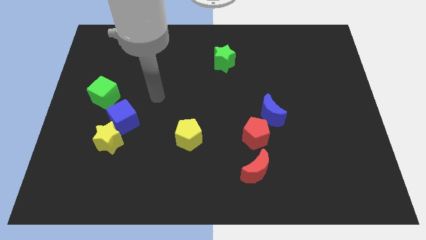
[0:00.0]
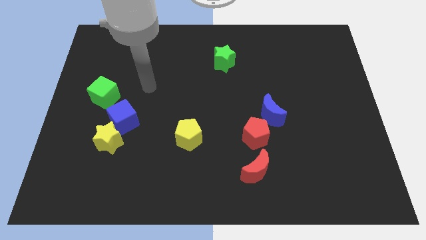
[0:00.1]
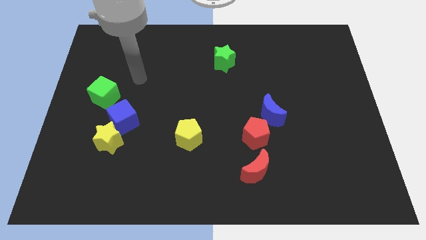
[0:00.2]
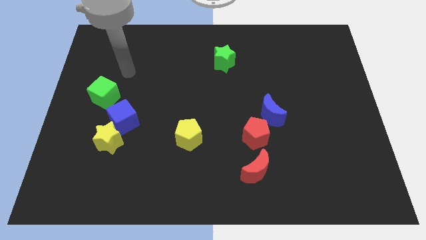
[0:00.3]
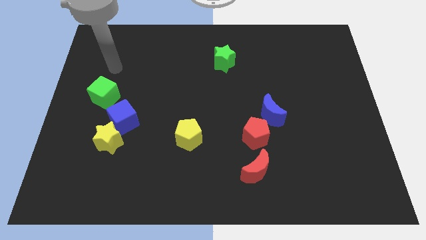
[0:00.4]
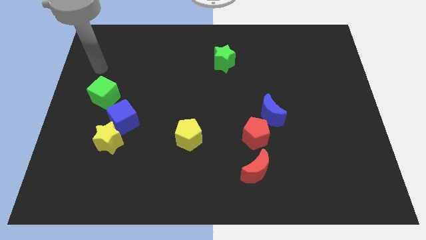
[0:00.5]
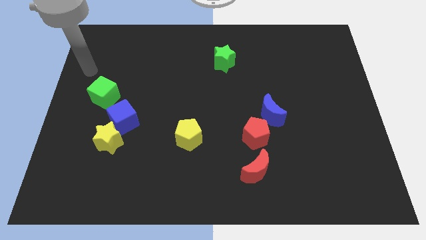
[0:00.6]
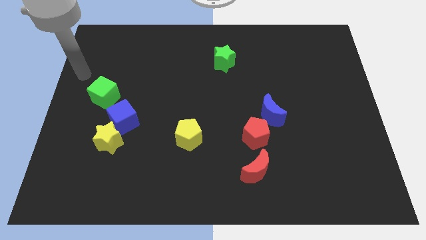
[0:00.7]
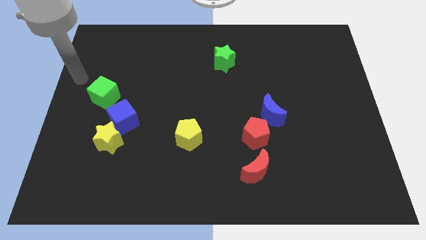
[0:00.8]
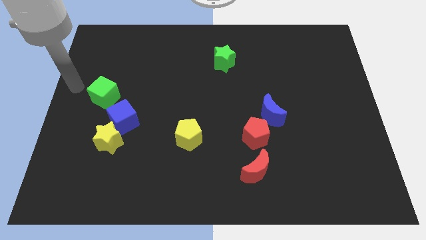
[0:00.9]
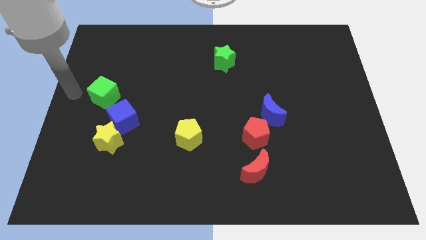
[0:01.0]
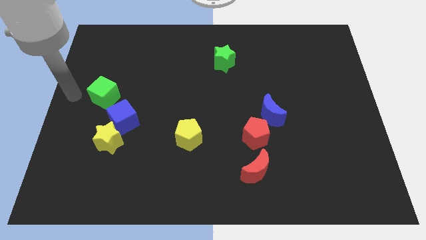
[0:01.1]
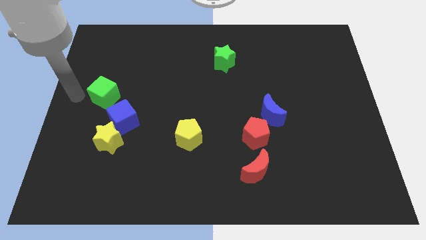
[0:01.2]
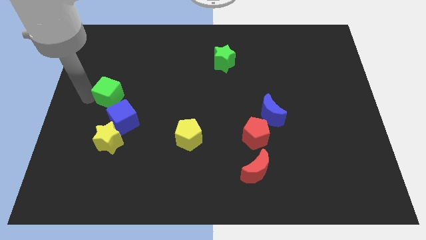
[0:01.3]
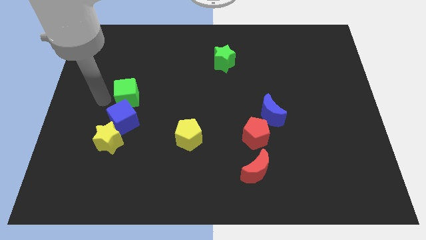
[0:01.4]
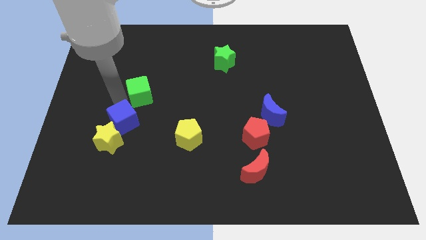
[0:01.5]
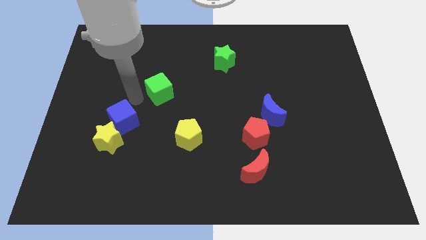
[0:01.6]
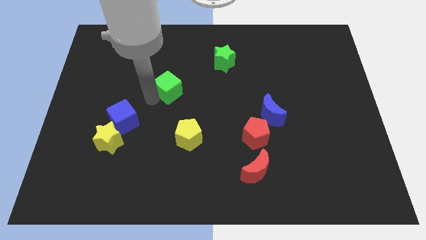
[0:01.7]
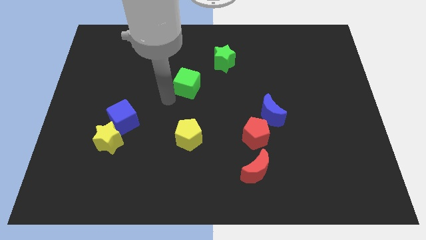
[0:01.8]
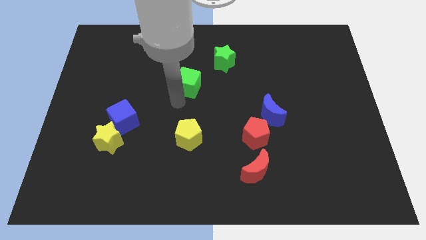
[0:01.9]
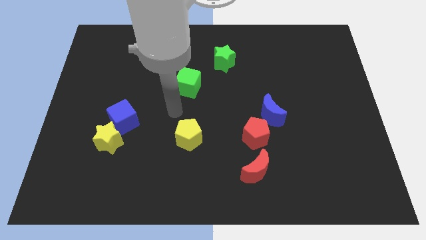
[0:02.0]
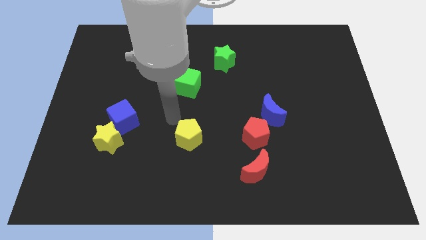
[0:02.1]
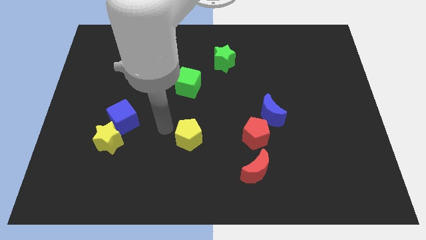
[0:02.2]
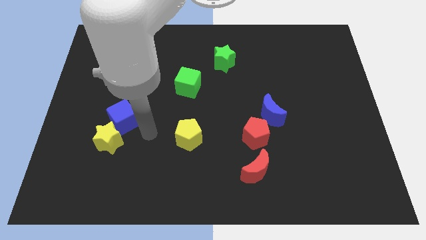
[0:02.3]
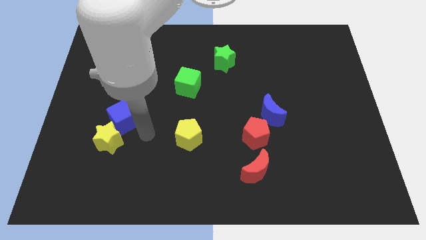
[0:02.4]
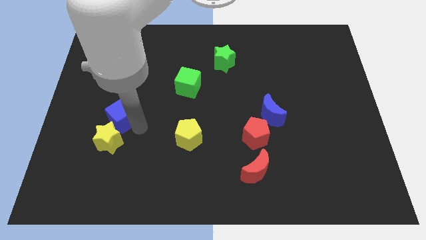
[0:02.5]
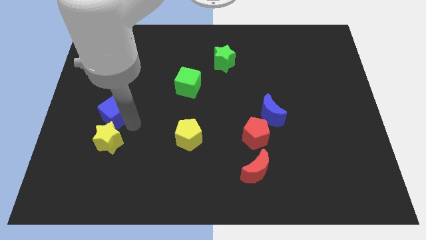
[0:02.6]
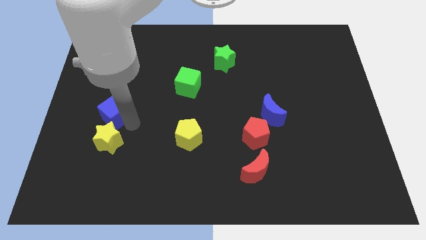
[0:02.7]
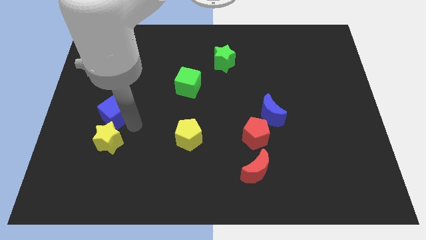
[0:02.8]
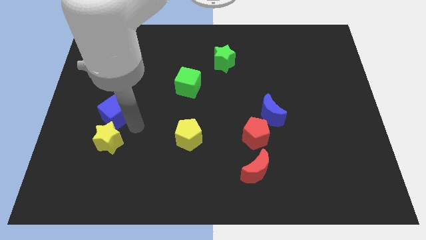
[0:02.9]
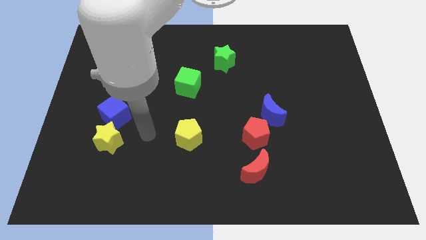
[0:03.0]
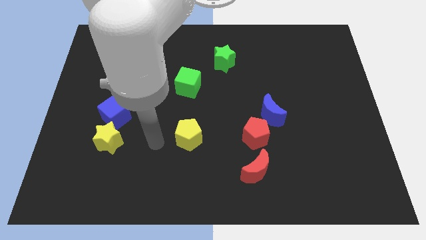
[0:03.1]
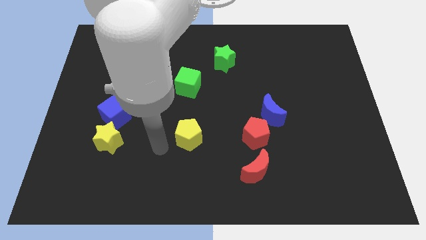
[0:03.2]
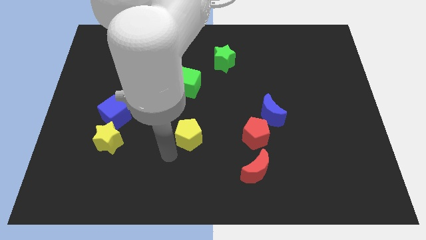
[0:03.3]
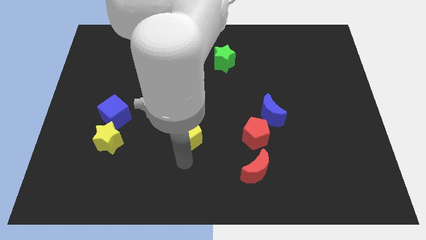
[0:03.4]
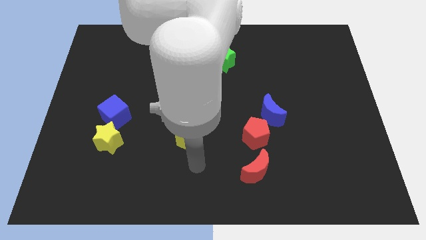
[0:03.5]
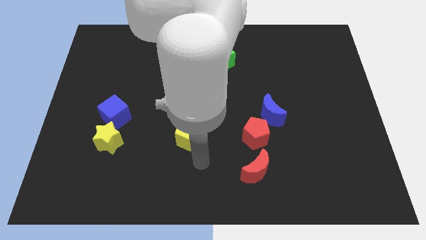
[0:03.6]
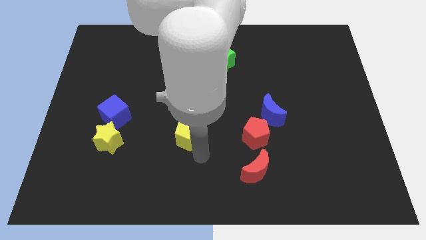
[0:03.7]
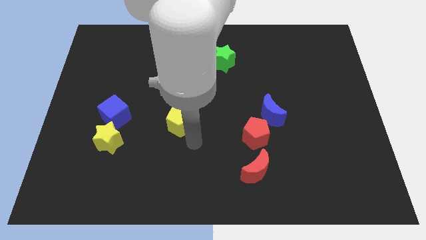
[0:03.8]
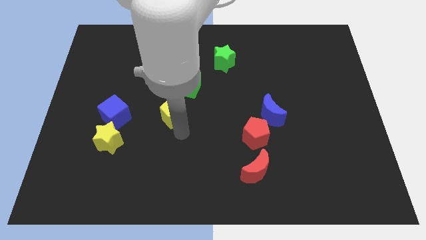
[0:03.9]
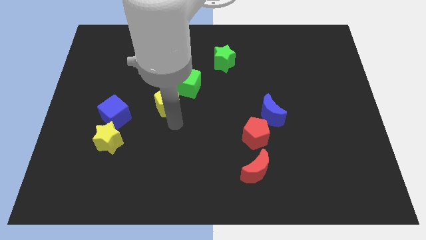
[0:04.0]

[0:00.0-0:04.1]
move the green cube to the bottom left of the green star

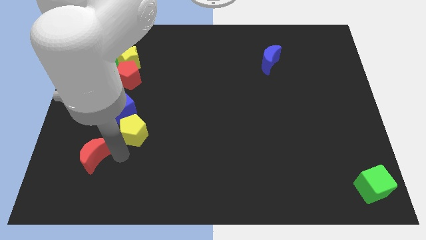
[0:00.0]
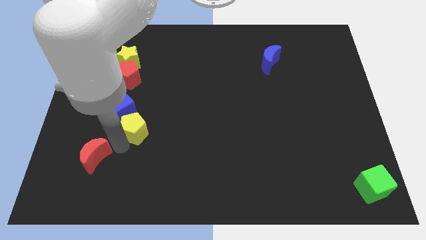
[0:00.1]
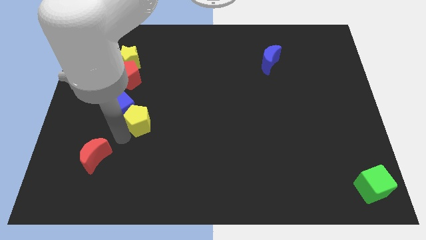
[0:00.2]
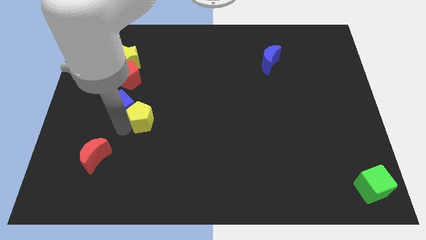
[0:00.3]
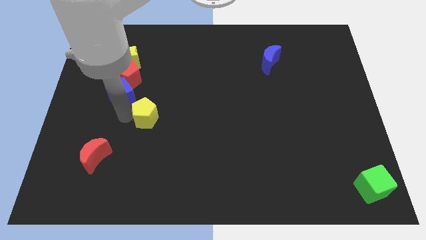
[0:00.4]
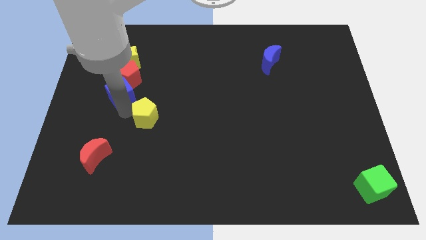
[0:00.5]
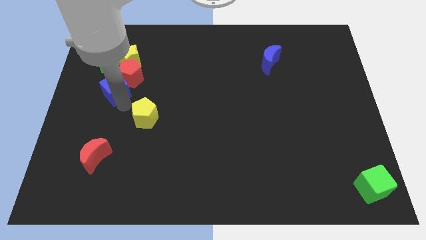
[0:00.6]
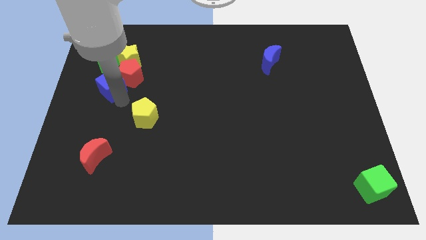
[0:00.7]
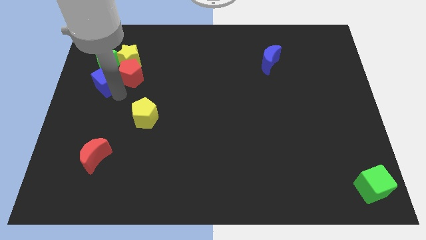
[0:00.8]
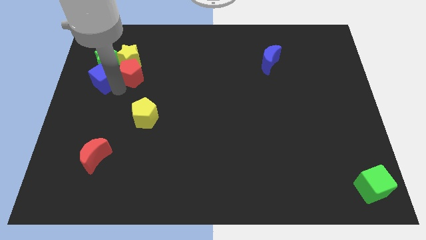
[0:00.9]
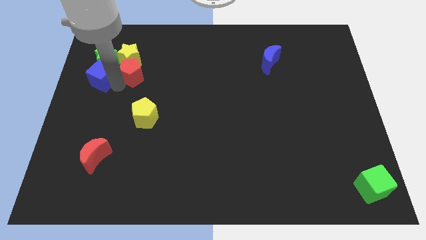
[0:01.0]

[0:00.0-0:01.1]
push the blue cube into the green star

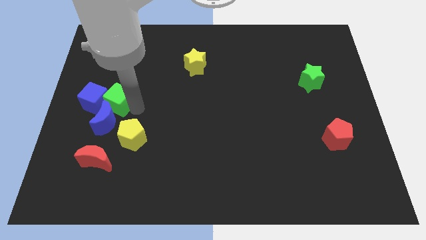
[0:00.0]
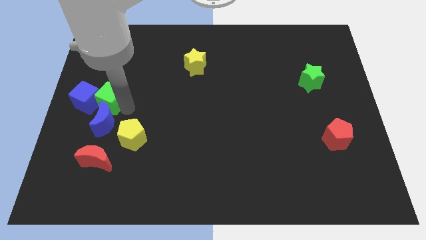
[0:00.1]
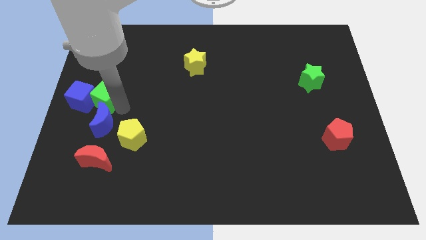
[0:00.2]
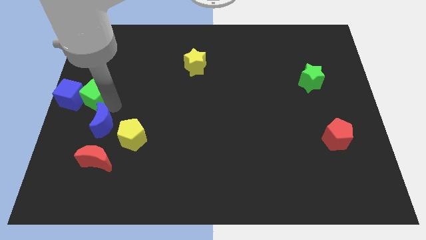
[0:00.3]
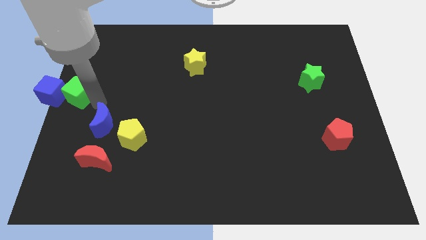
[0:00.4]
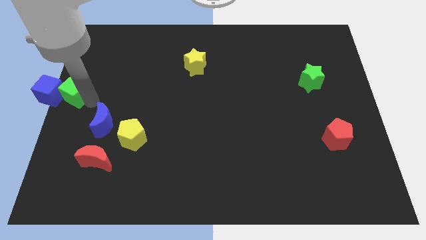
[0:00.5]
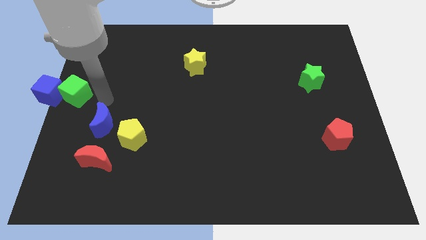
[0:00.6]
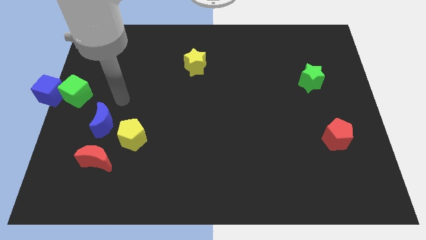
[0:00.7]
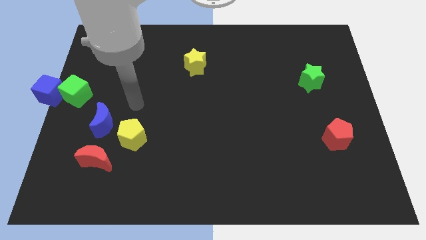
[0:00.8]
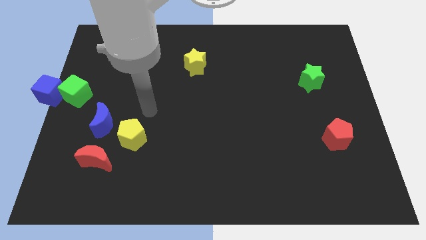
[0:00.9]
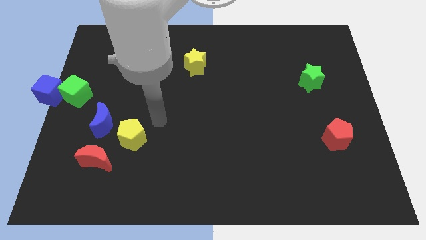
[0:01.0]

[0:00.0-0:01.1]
push the blue cube with a green cube at the center left of the corner

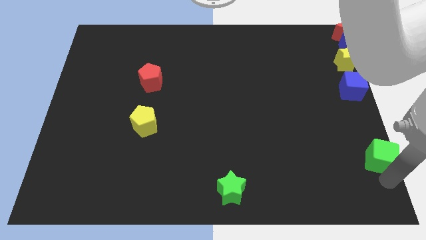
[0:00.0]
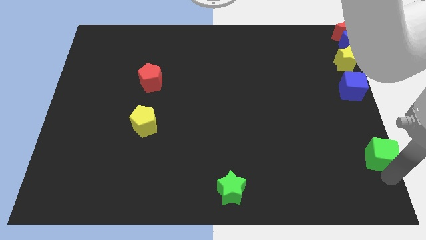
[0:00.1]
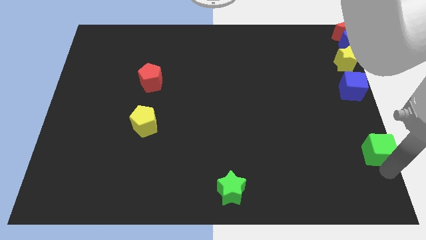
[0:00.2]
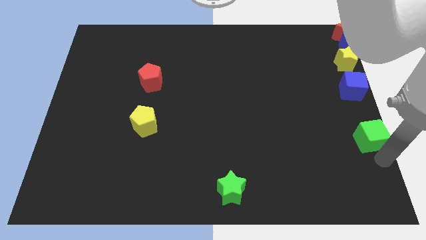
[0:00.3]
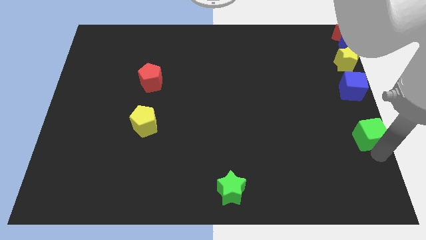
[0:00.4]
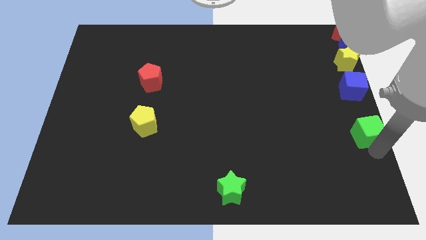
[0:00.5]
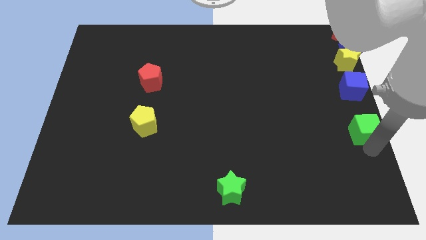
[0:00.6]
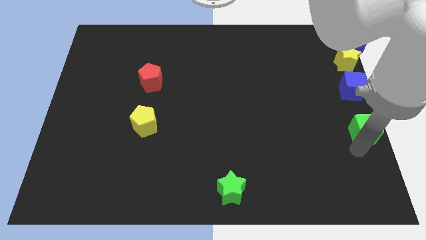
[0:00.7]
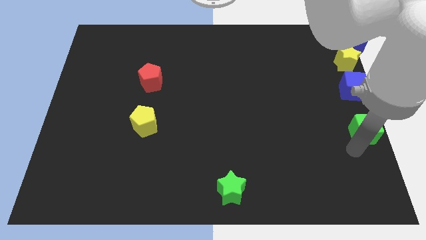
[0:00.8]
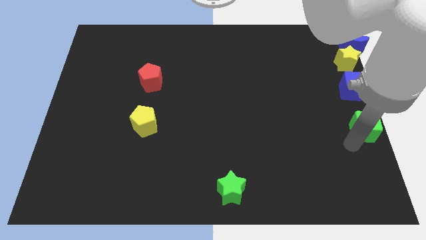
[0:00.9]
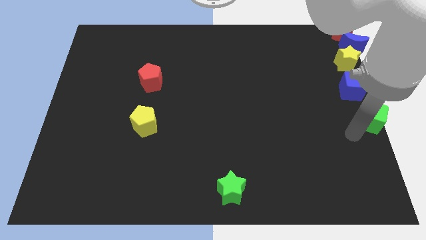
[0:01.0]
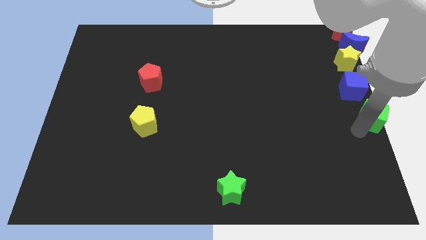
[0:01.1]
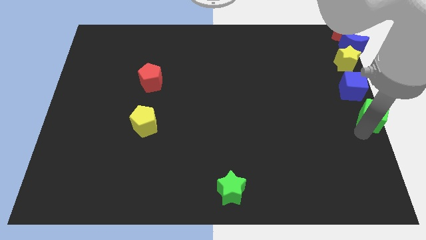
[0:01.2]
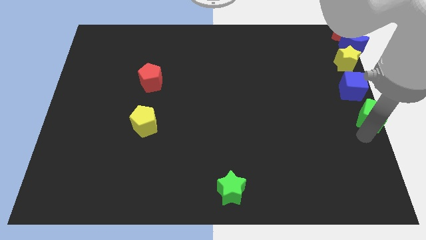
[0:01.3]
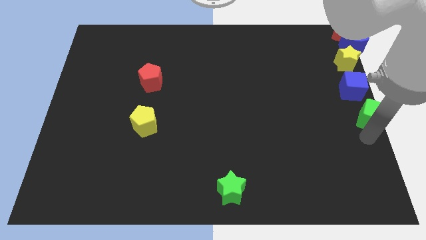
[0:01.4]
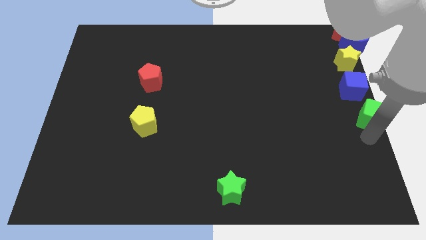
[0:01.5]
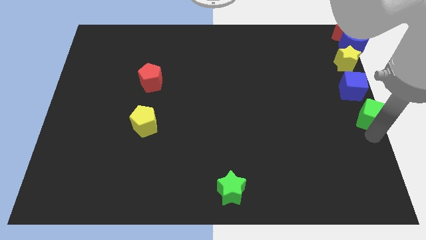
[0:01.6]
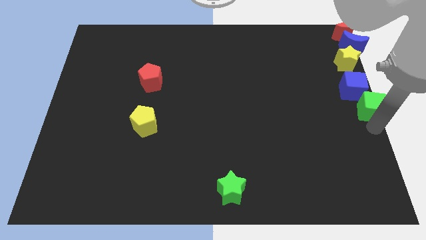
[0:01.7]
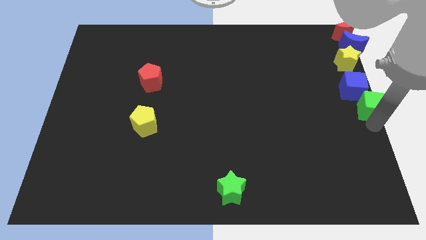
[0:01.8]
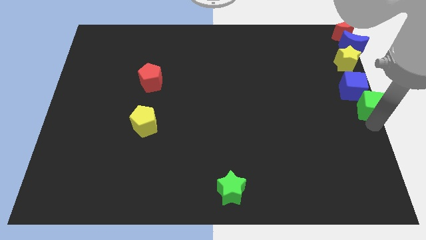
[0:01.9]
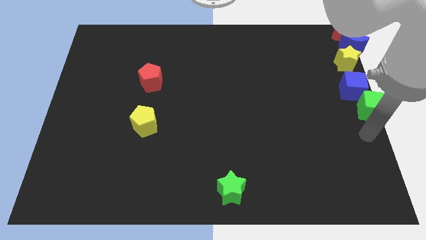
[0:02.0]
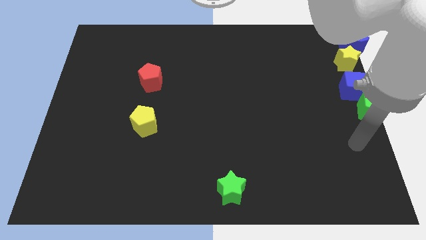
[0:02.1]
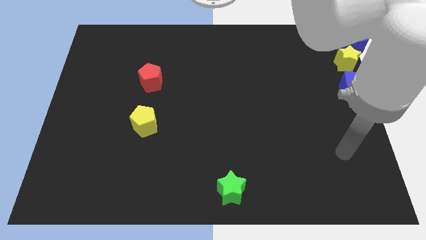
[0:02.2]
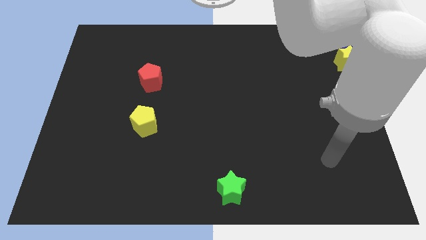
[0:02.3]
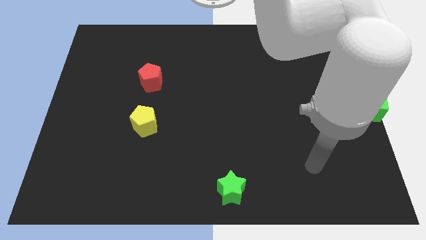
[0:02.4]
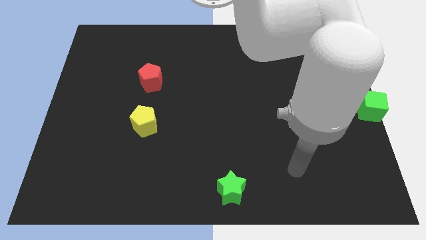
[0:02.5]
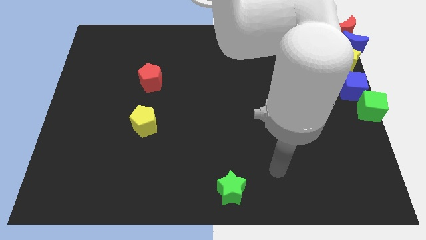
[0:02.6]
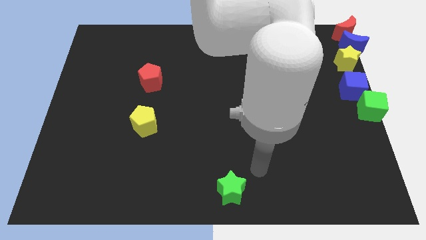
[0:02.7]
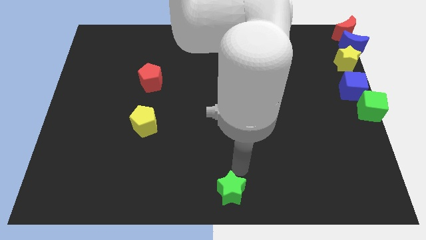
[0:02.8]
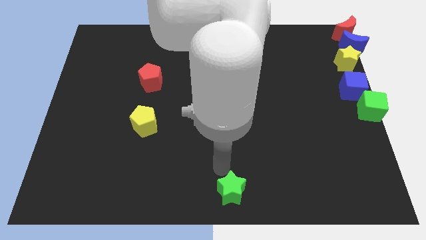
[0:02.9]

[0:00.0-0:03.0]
place green cube below blue cube
